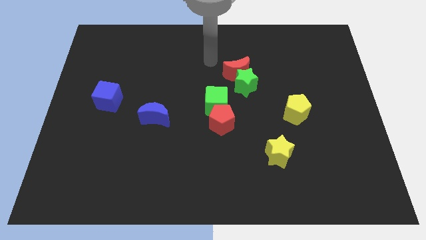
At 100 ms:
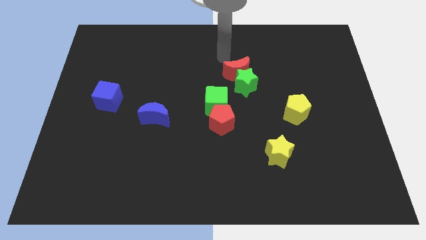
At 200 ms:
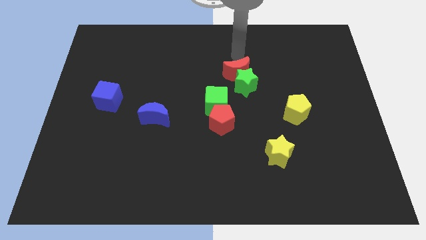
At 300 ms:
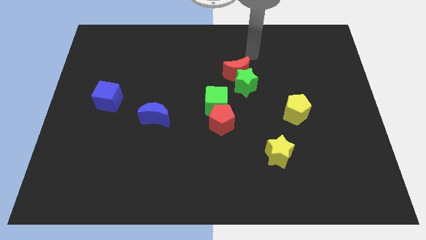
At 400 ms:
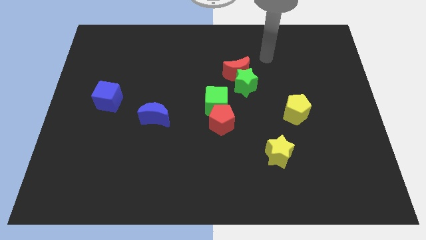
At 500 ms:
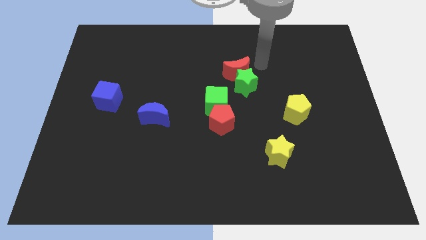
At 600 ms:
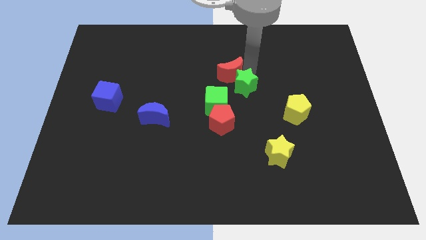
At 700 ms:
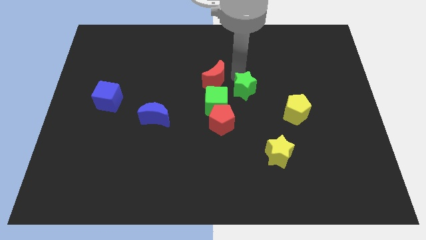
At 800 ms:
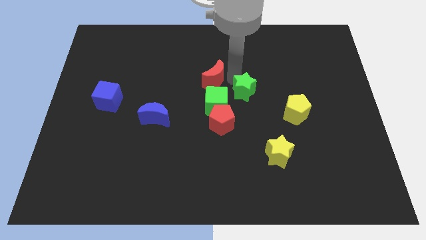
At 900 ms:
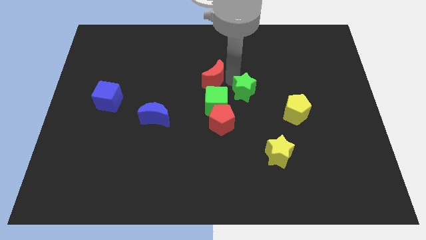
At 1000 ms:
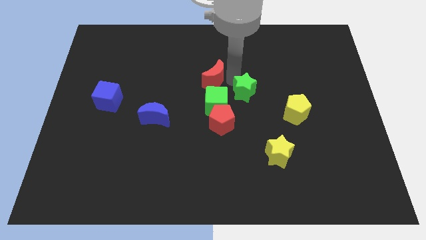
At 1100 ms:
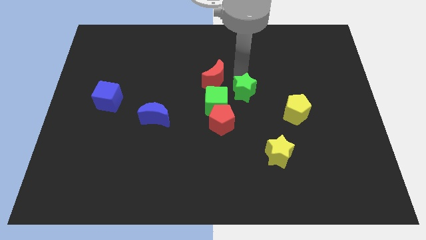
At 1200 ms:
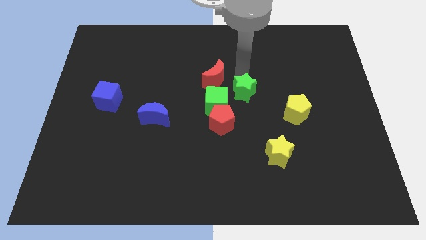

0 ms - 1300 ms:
place red moon above green cube

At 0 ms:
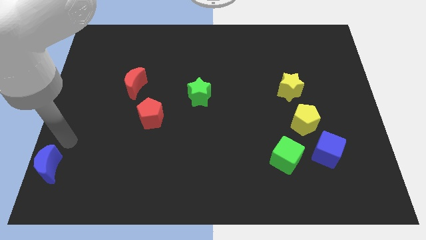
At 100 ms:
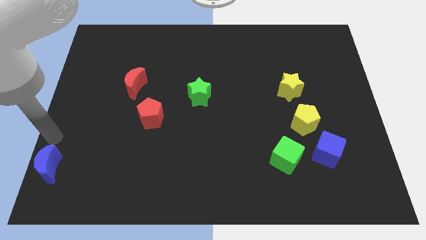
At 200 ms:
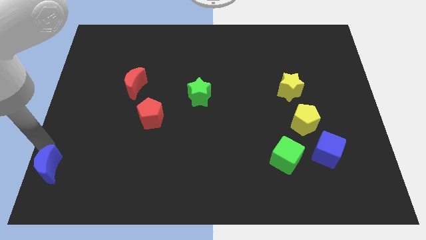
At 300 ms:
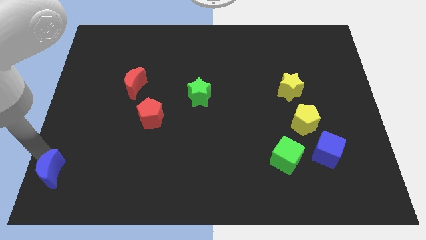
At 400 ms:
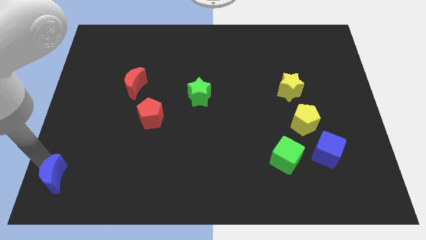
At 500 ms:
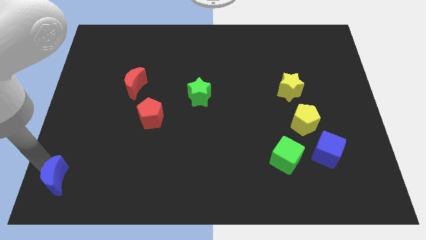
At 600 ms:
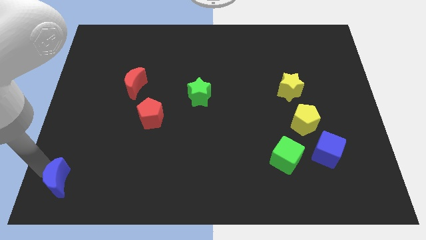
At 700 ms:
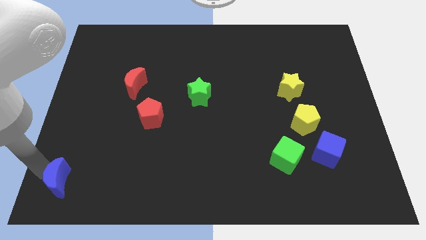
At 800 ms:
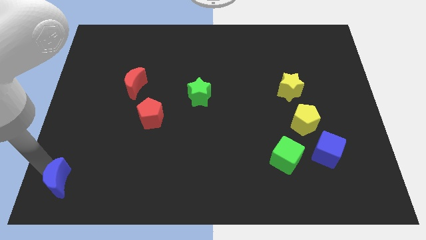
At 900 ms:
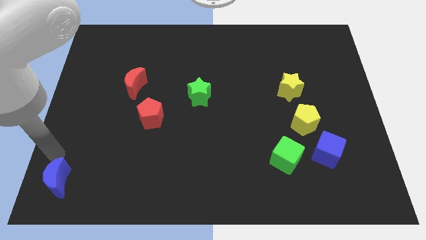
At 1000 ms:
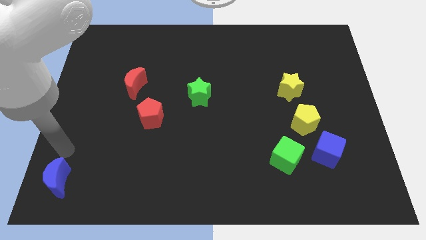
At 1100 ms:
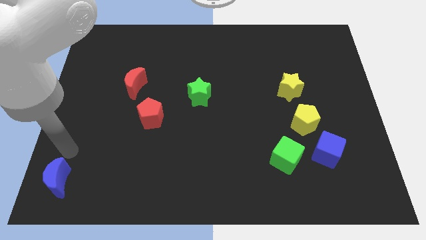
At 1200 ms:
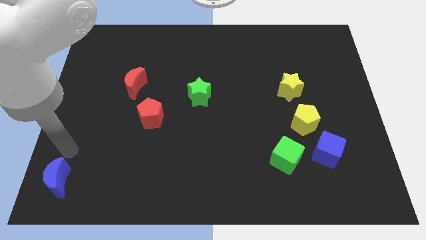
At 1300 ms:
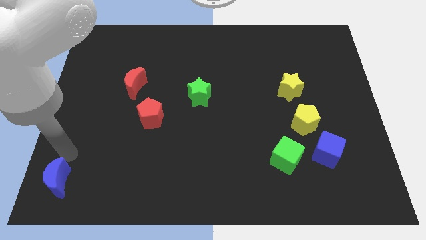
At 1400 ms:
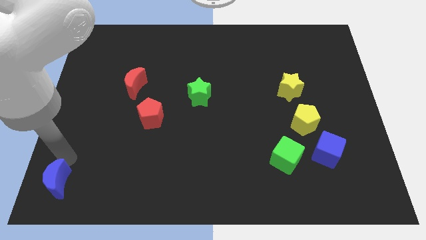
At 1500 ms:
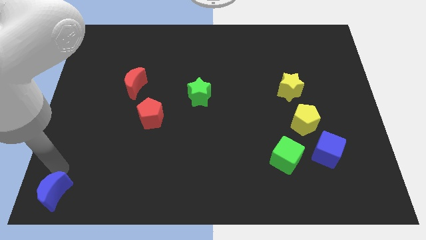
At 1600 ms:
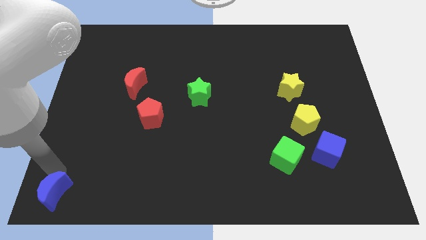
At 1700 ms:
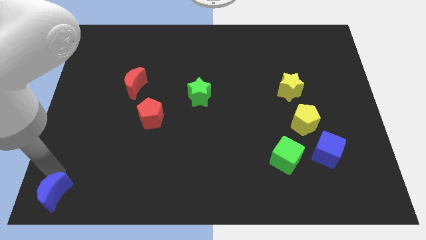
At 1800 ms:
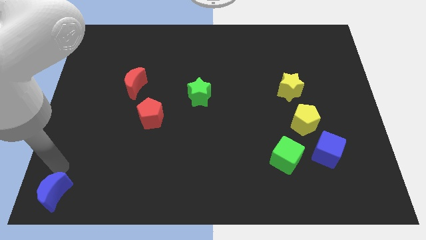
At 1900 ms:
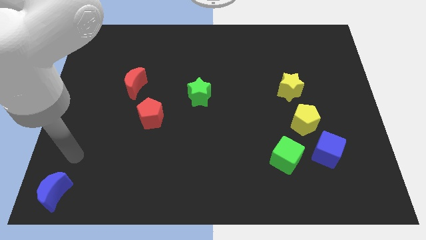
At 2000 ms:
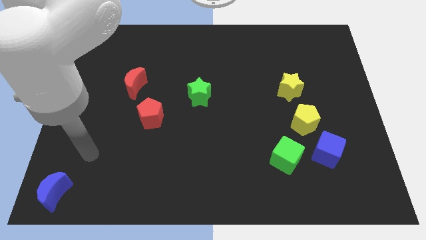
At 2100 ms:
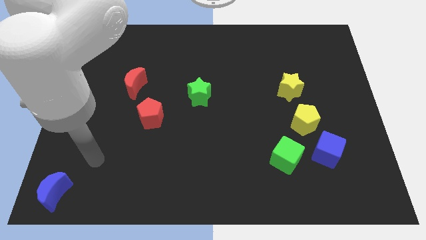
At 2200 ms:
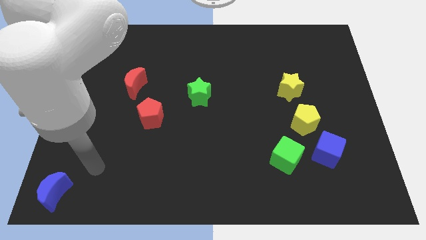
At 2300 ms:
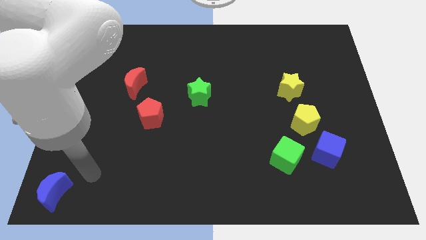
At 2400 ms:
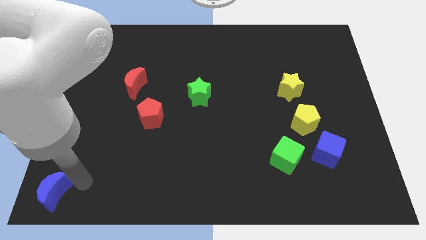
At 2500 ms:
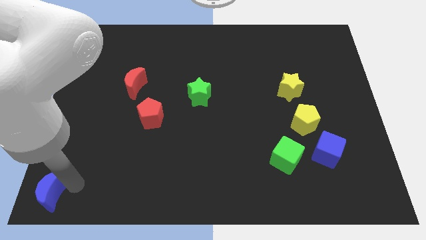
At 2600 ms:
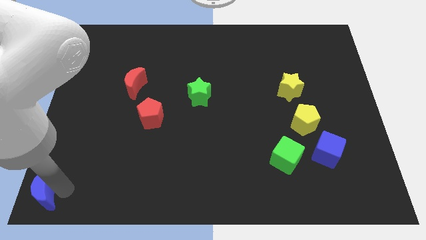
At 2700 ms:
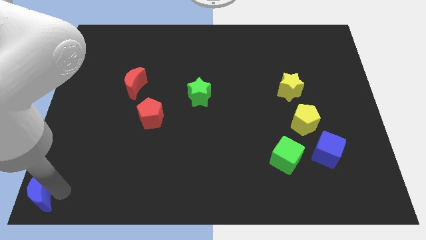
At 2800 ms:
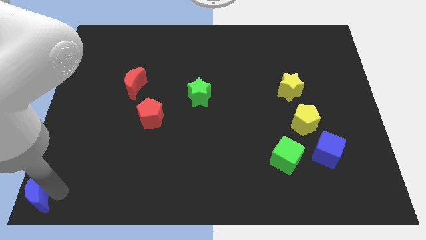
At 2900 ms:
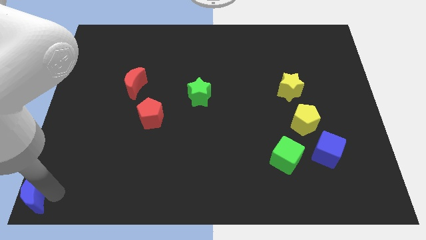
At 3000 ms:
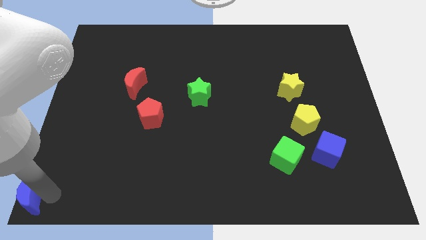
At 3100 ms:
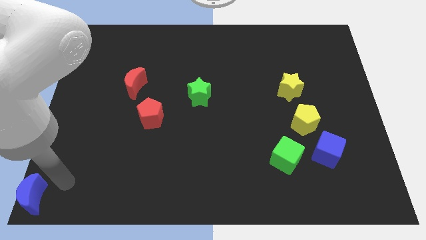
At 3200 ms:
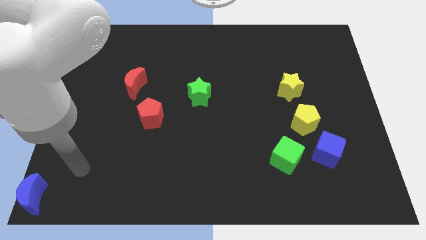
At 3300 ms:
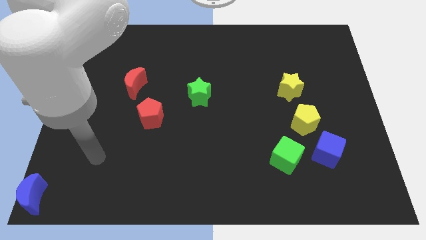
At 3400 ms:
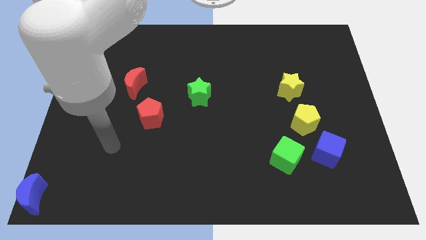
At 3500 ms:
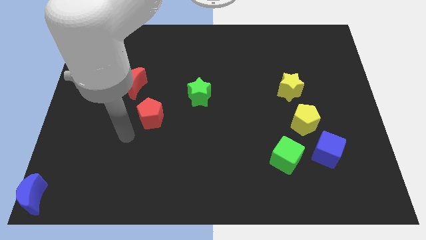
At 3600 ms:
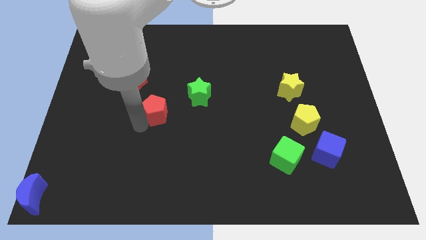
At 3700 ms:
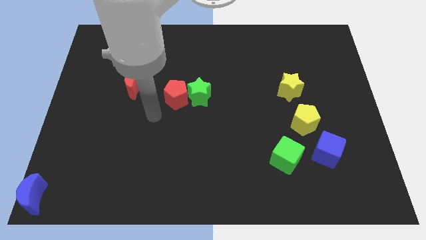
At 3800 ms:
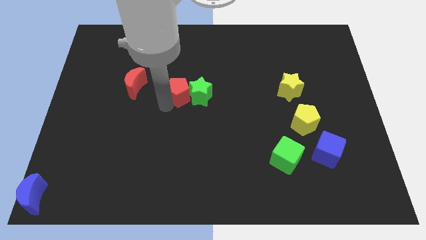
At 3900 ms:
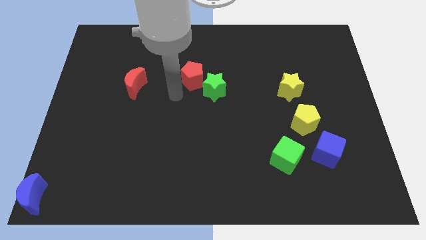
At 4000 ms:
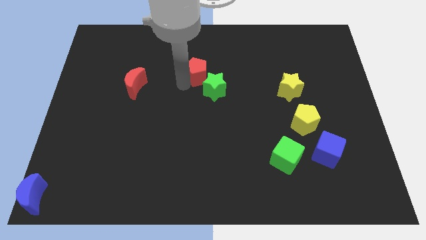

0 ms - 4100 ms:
place the red pentagon on the top left of the green star

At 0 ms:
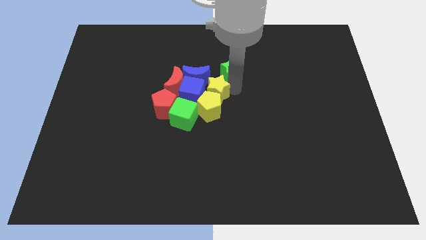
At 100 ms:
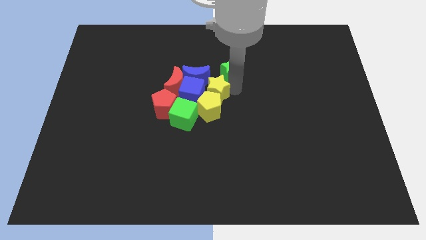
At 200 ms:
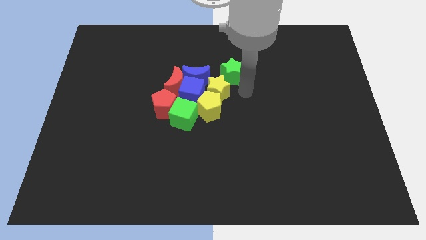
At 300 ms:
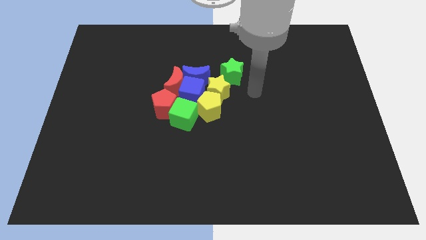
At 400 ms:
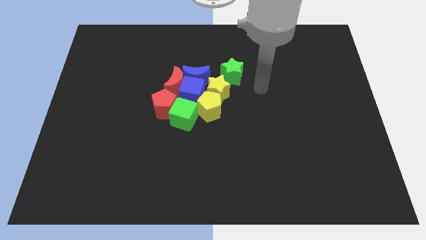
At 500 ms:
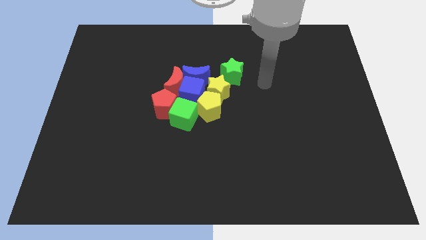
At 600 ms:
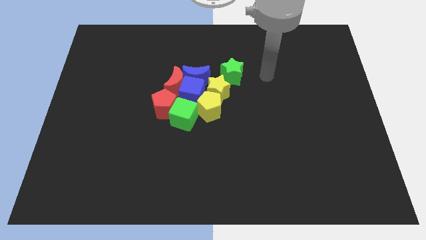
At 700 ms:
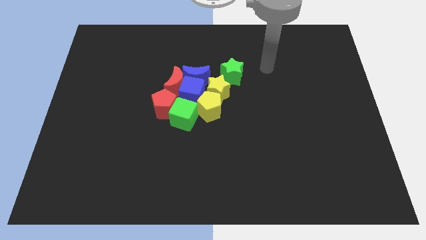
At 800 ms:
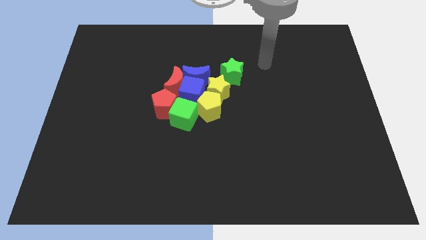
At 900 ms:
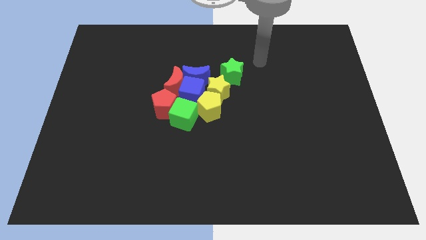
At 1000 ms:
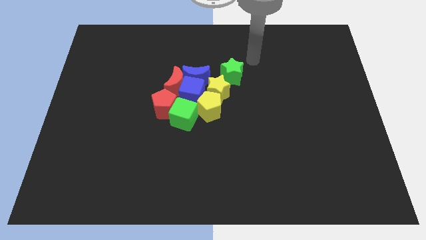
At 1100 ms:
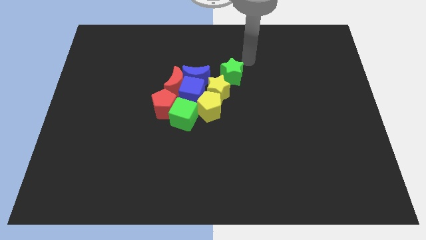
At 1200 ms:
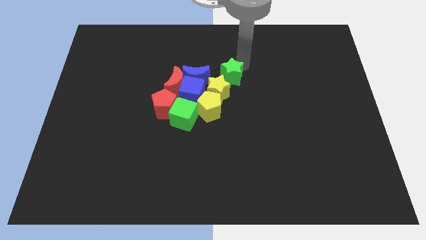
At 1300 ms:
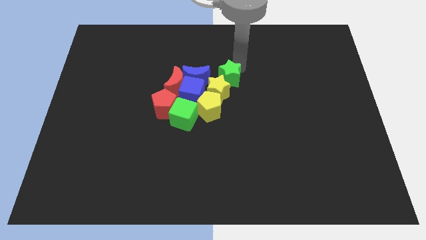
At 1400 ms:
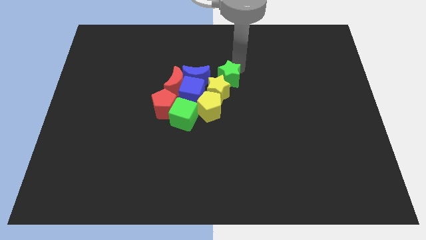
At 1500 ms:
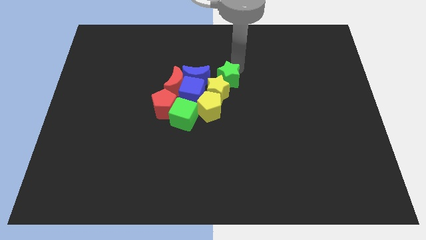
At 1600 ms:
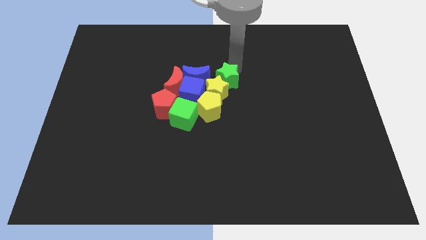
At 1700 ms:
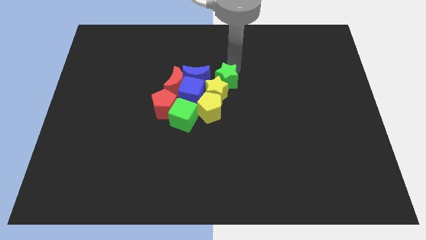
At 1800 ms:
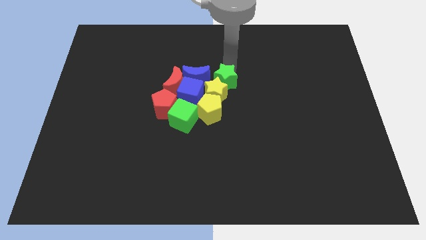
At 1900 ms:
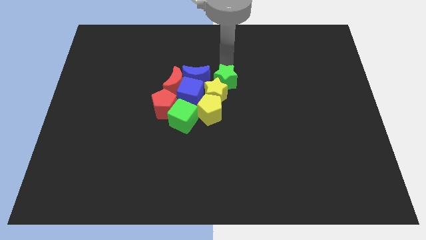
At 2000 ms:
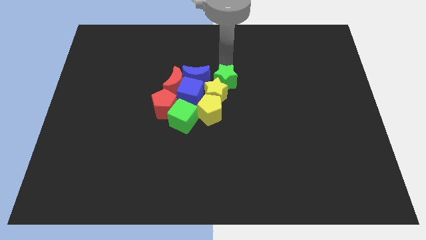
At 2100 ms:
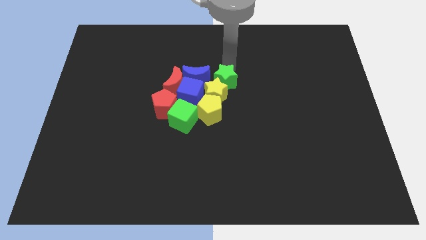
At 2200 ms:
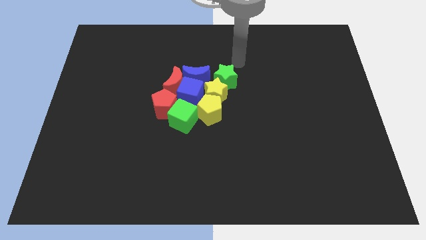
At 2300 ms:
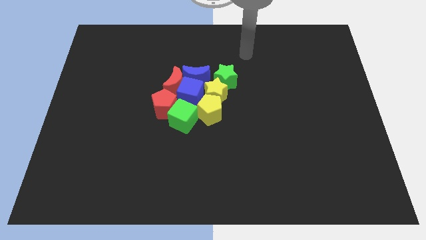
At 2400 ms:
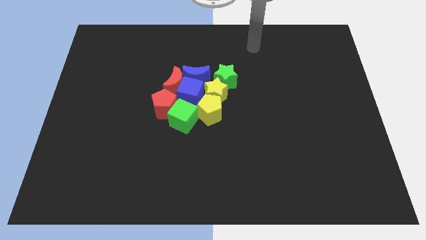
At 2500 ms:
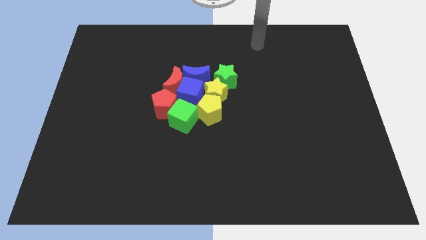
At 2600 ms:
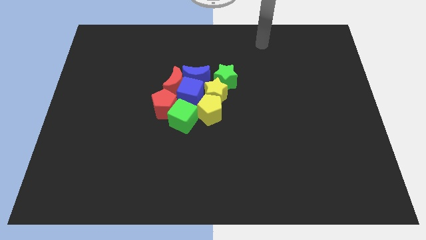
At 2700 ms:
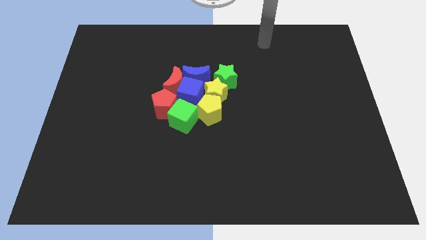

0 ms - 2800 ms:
push the green star into the yellow star

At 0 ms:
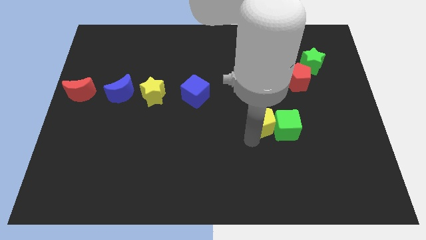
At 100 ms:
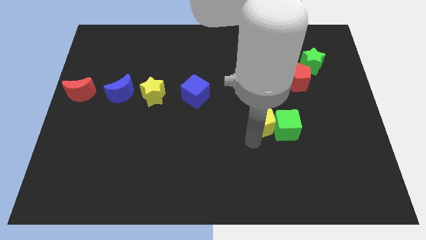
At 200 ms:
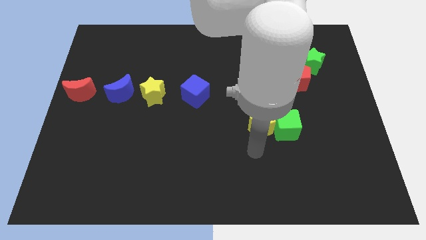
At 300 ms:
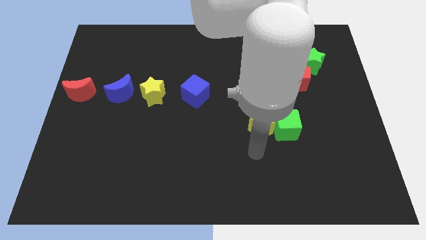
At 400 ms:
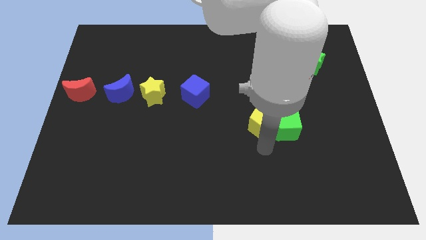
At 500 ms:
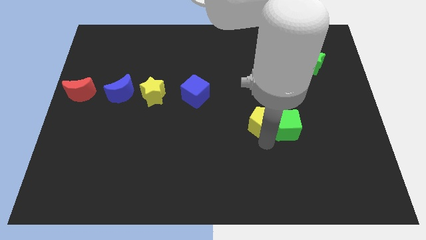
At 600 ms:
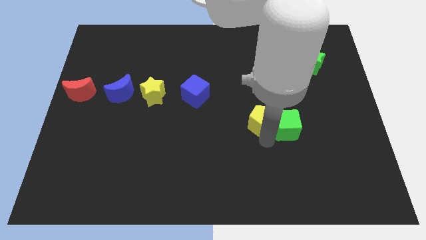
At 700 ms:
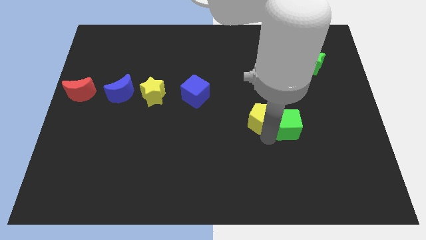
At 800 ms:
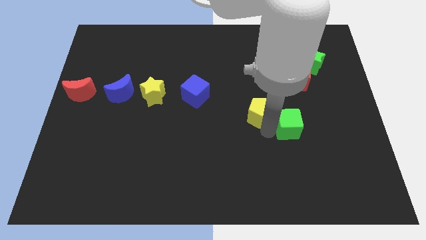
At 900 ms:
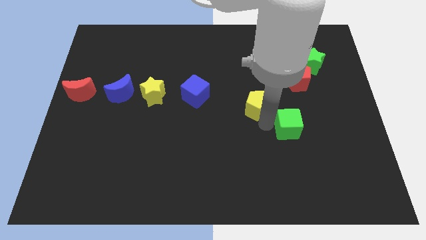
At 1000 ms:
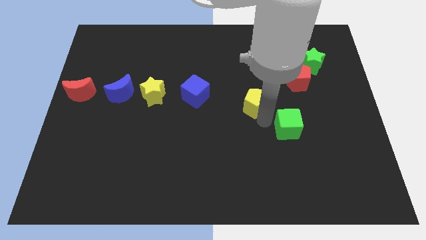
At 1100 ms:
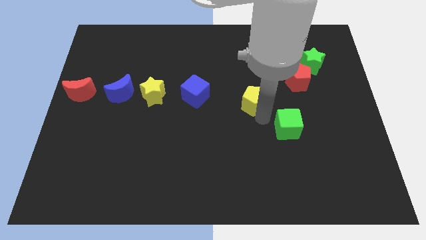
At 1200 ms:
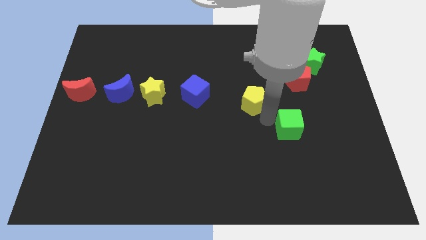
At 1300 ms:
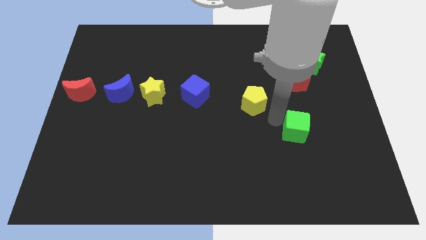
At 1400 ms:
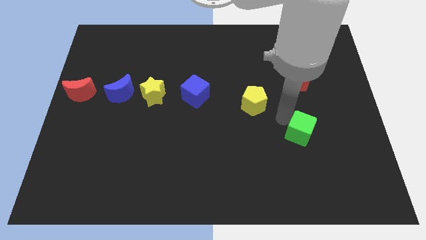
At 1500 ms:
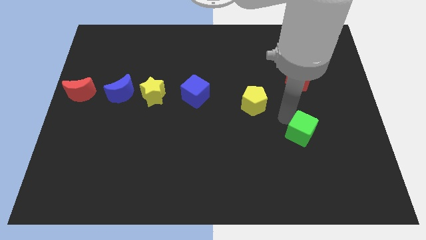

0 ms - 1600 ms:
separate the yellow pentagon from the green cube
